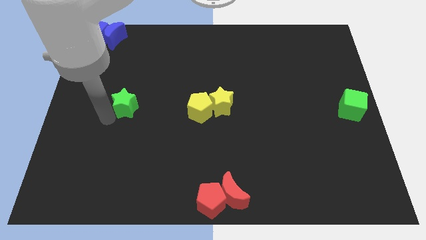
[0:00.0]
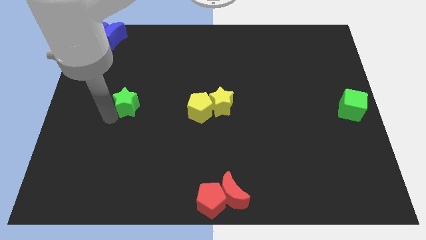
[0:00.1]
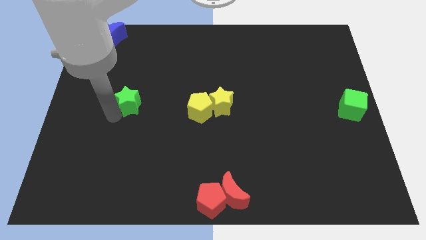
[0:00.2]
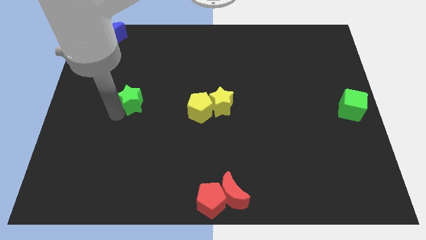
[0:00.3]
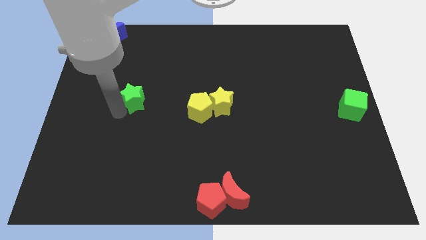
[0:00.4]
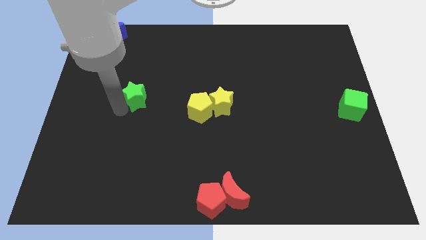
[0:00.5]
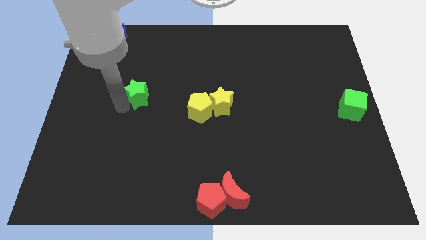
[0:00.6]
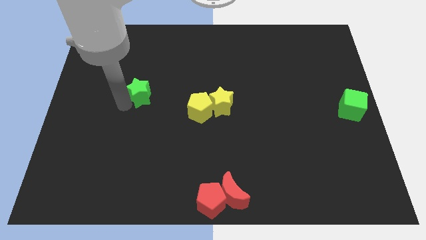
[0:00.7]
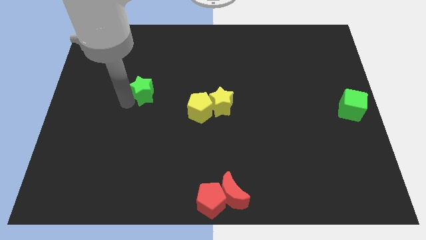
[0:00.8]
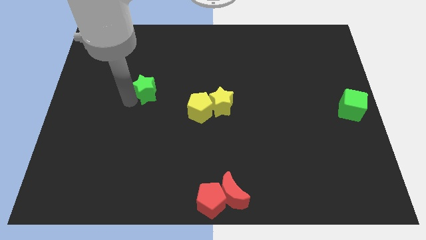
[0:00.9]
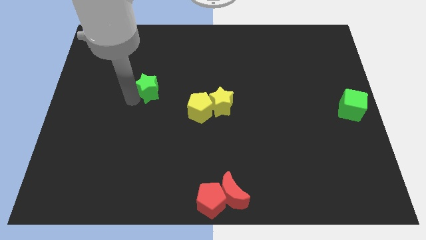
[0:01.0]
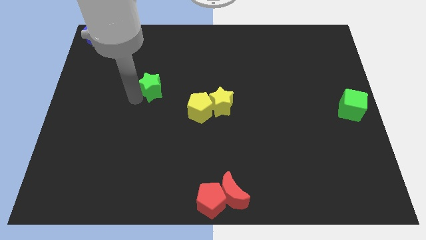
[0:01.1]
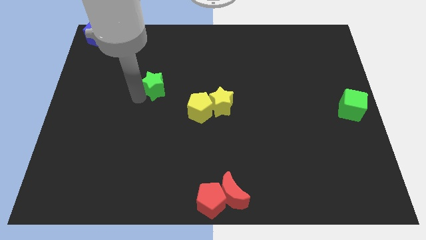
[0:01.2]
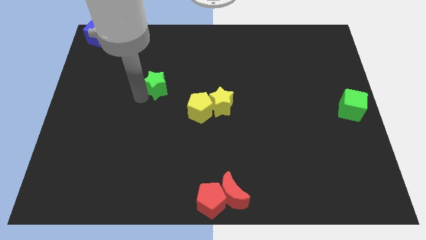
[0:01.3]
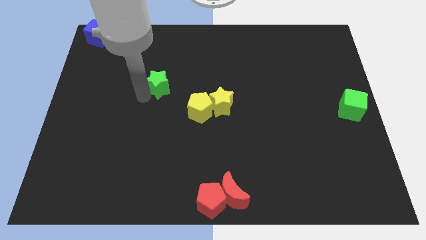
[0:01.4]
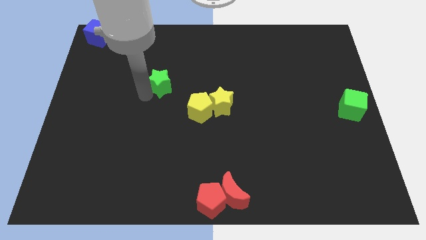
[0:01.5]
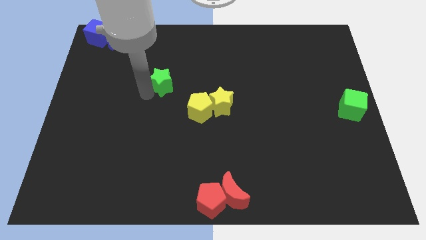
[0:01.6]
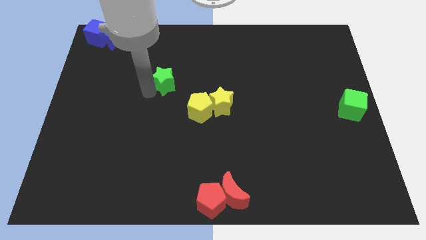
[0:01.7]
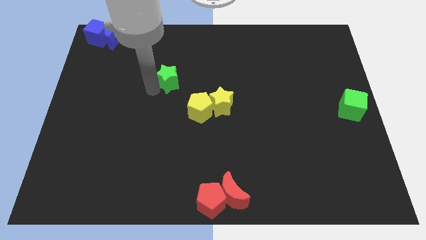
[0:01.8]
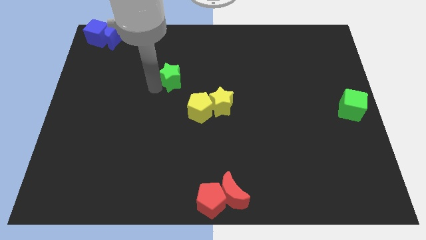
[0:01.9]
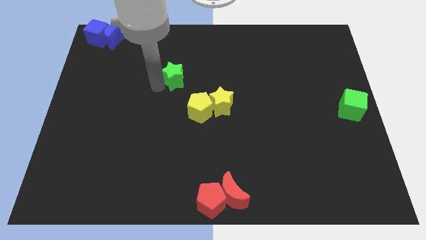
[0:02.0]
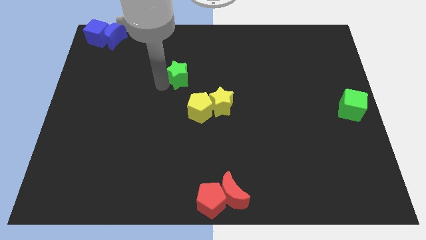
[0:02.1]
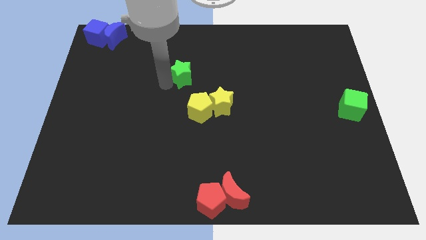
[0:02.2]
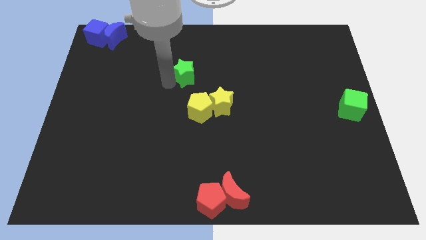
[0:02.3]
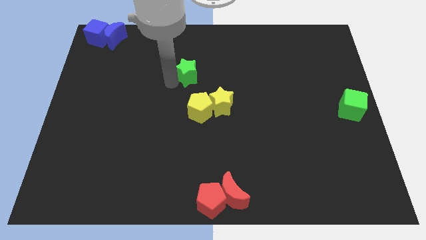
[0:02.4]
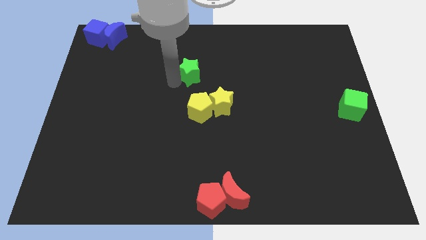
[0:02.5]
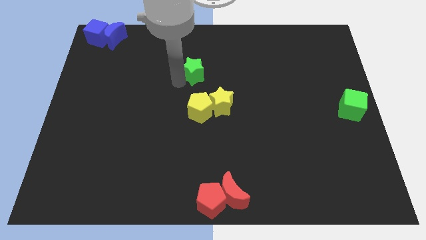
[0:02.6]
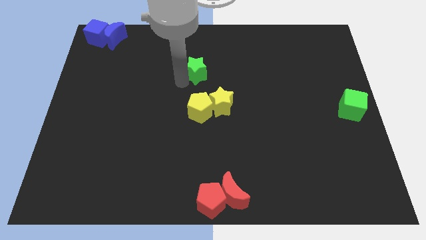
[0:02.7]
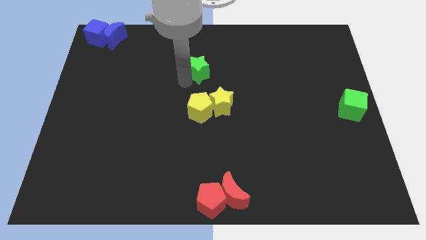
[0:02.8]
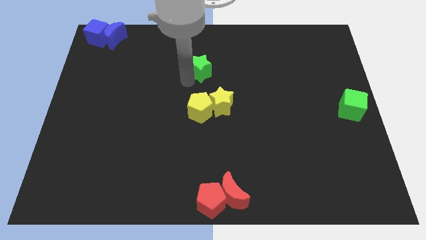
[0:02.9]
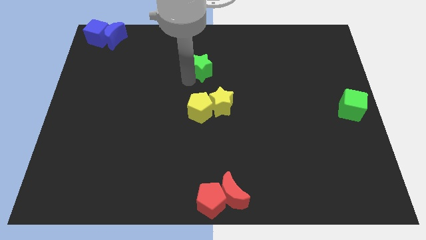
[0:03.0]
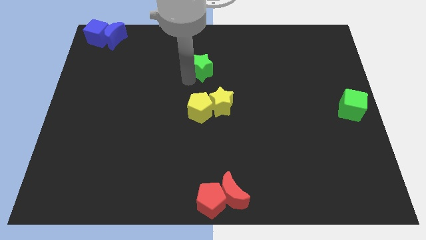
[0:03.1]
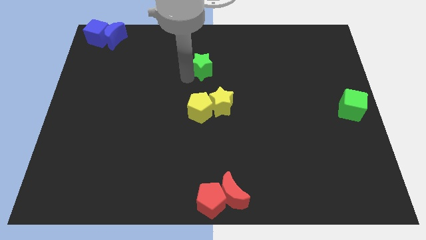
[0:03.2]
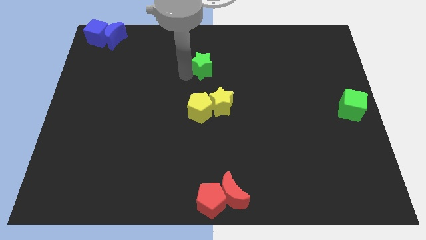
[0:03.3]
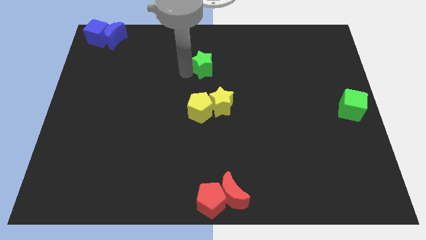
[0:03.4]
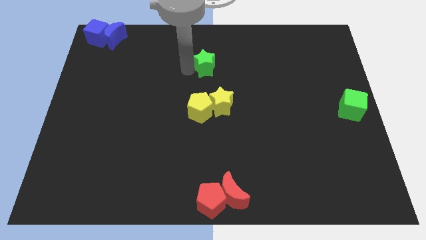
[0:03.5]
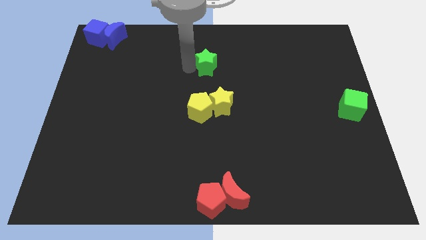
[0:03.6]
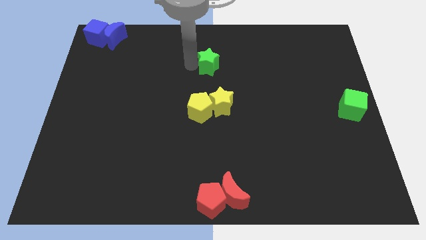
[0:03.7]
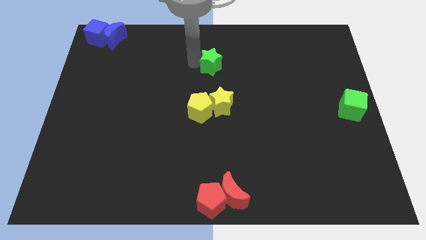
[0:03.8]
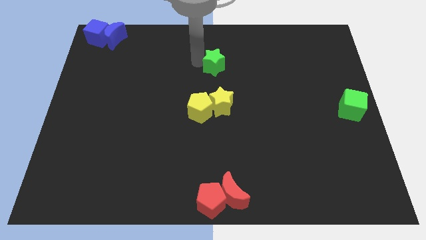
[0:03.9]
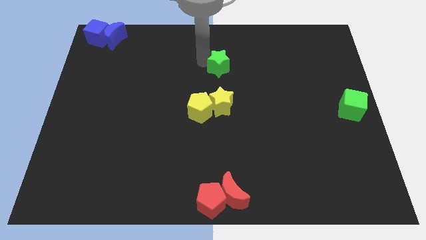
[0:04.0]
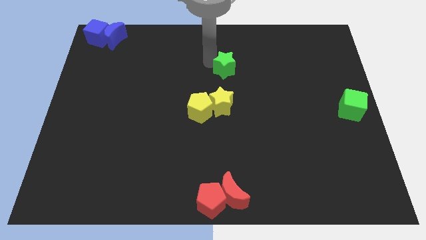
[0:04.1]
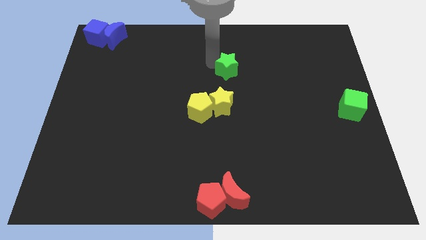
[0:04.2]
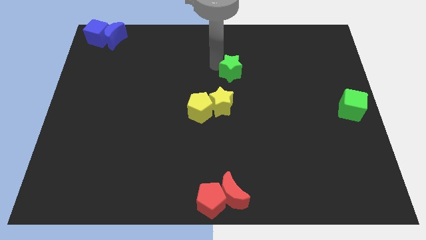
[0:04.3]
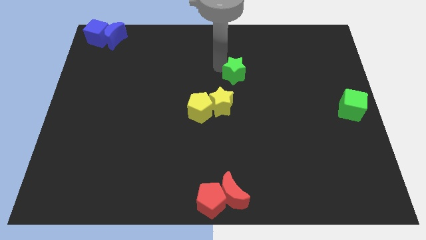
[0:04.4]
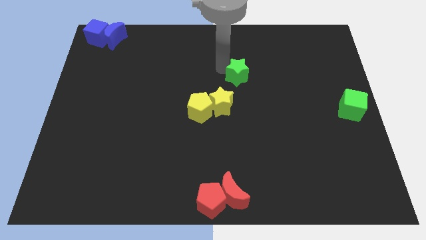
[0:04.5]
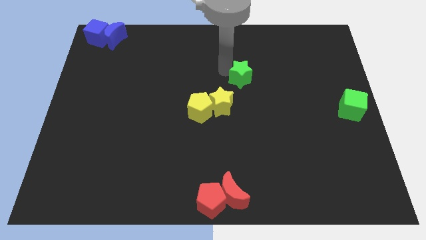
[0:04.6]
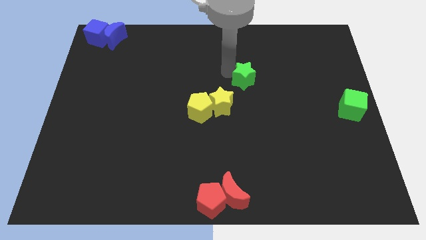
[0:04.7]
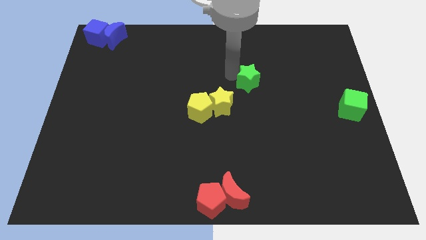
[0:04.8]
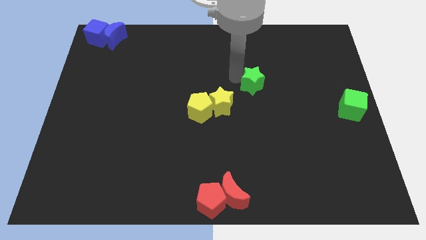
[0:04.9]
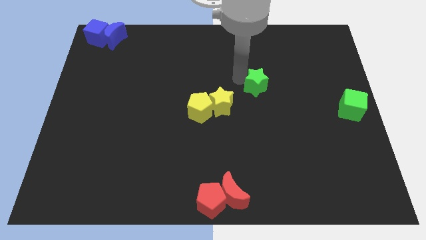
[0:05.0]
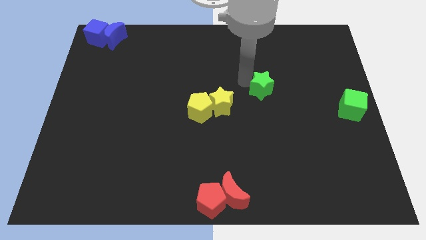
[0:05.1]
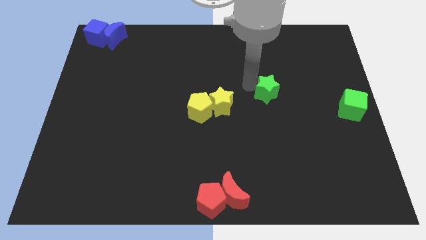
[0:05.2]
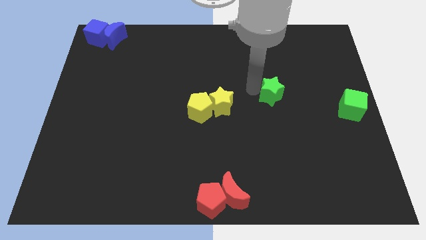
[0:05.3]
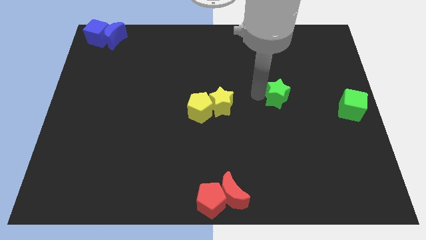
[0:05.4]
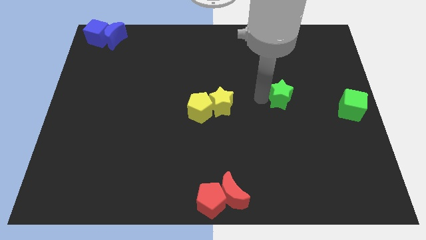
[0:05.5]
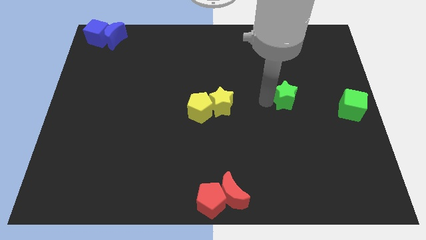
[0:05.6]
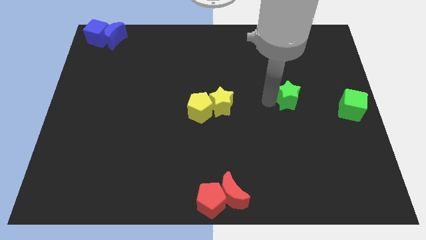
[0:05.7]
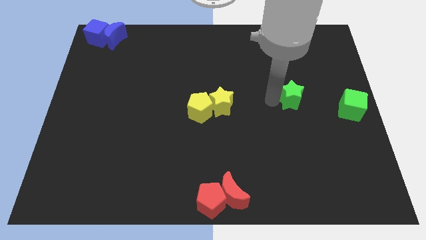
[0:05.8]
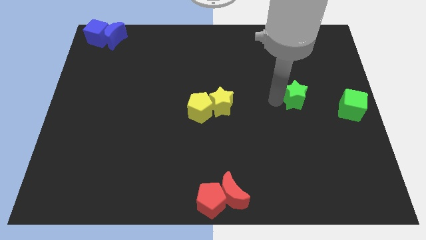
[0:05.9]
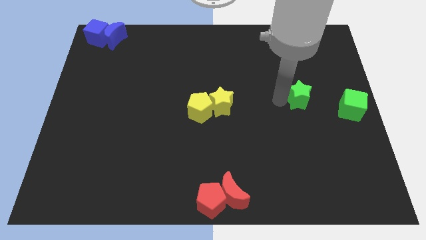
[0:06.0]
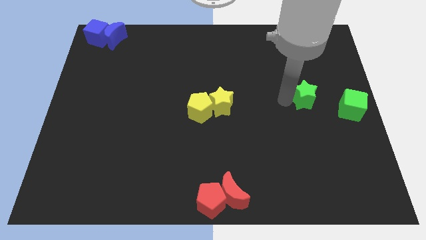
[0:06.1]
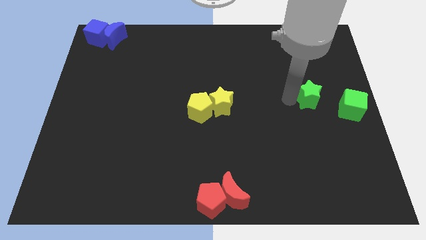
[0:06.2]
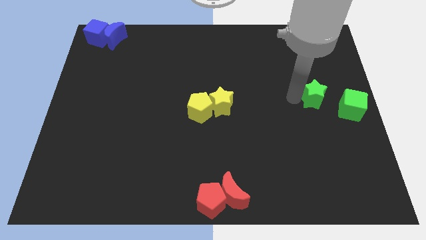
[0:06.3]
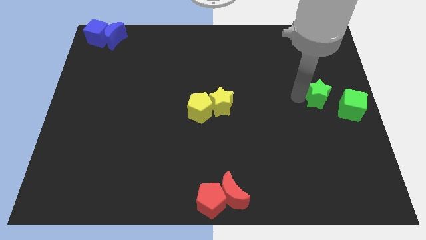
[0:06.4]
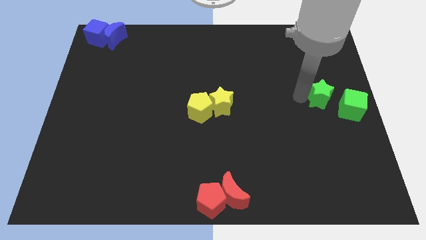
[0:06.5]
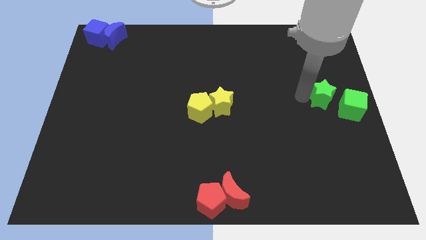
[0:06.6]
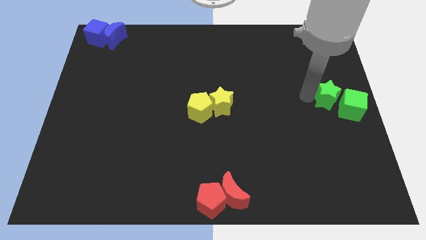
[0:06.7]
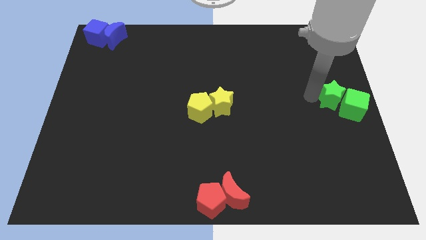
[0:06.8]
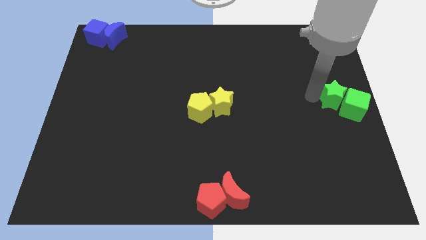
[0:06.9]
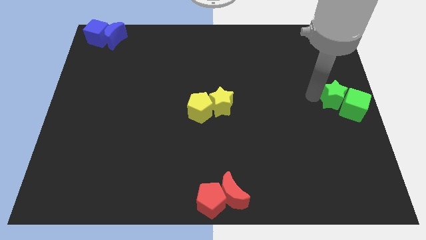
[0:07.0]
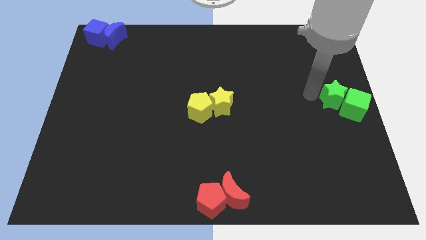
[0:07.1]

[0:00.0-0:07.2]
place the green star left to the green cube

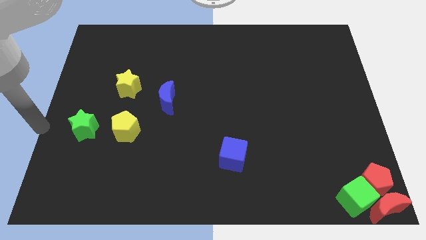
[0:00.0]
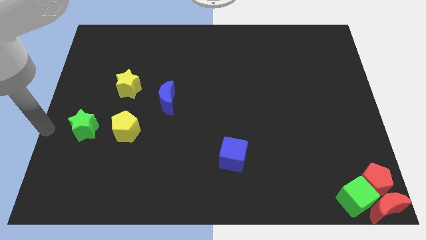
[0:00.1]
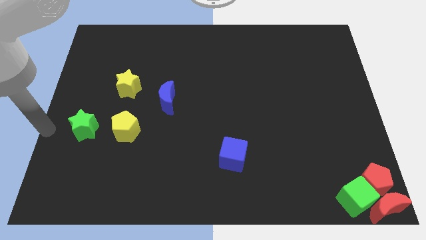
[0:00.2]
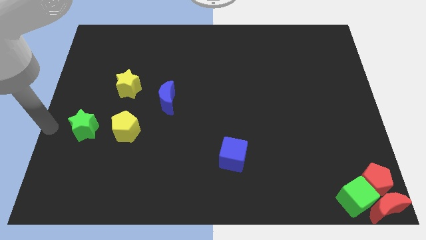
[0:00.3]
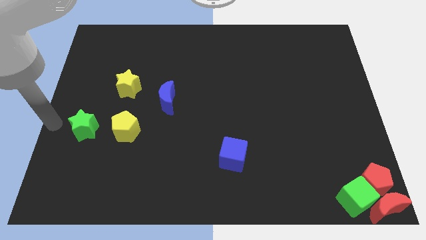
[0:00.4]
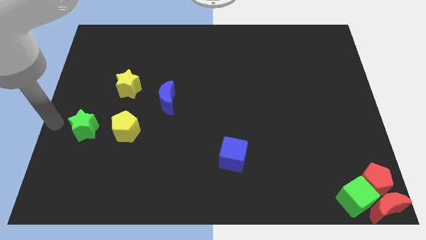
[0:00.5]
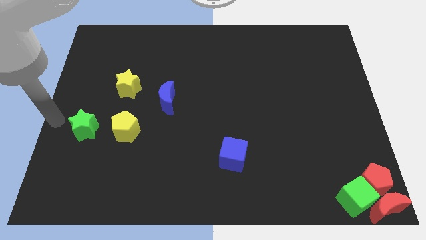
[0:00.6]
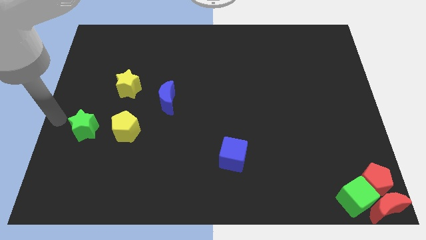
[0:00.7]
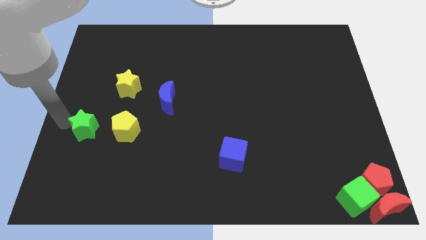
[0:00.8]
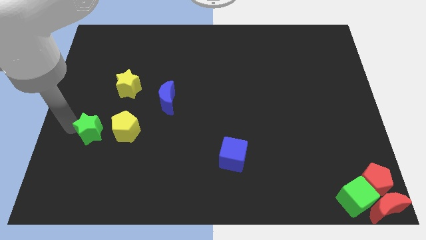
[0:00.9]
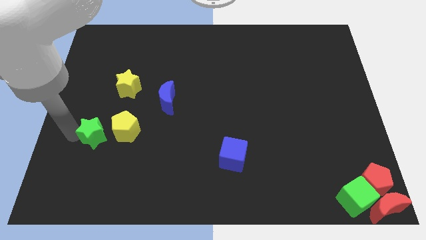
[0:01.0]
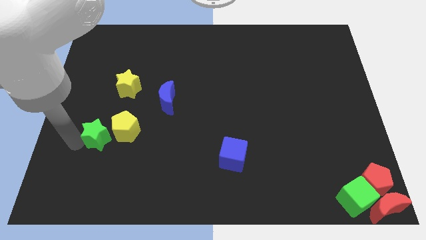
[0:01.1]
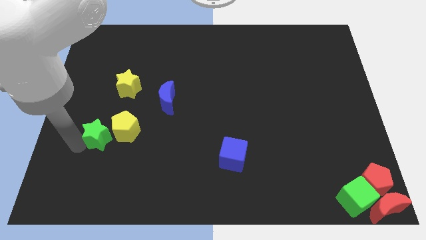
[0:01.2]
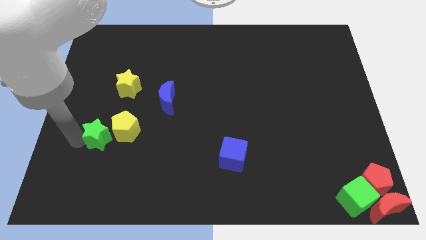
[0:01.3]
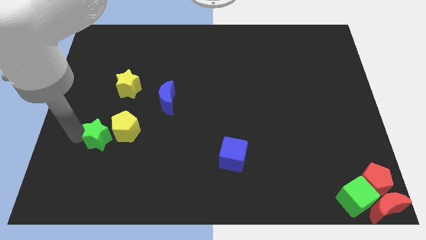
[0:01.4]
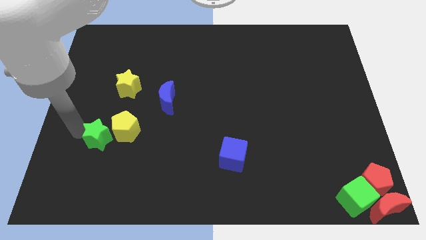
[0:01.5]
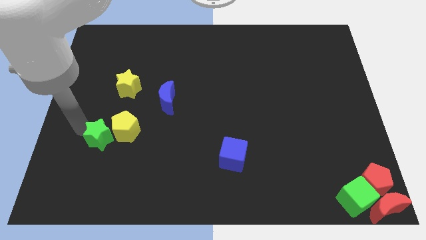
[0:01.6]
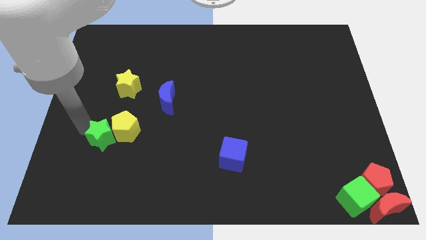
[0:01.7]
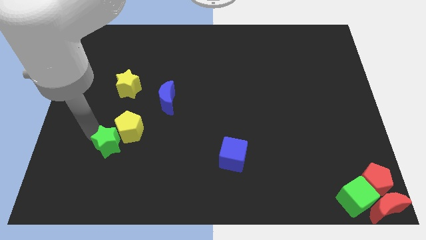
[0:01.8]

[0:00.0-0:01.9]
move the green star close to the yellow pentagon
